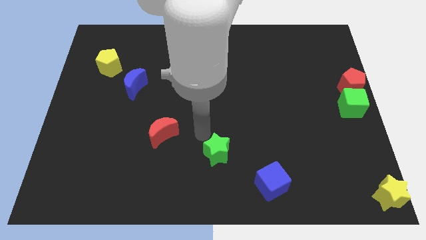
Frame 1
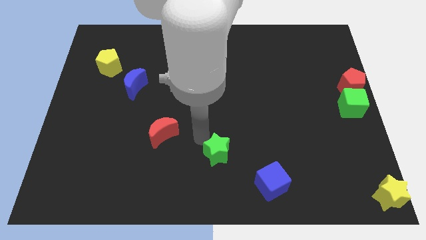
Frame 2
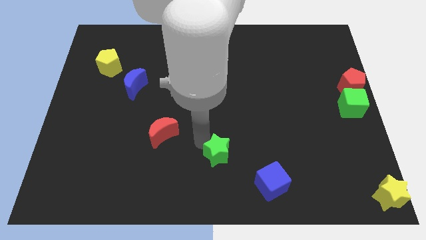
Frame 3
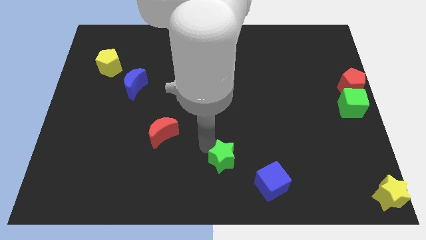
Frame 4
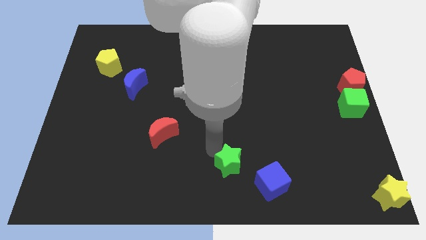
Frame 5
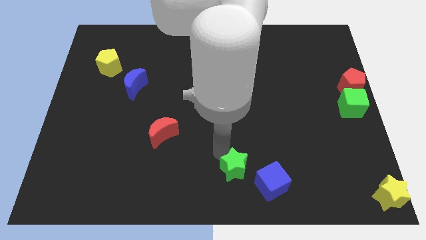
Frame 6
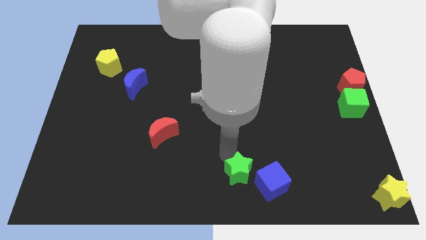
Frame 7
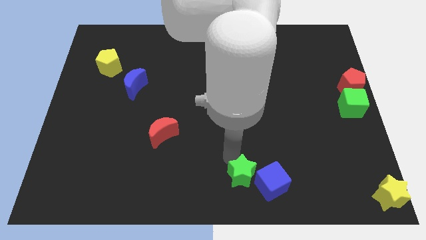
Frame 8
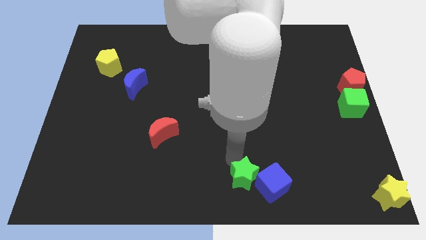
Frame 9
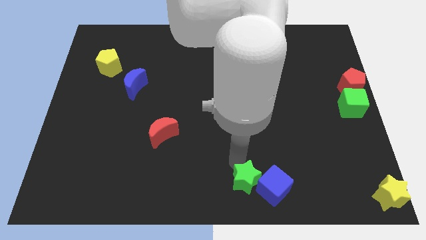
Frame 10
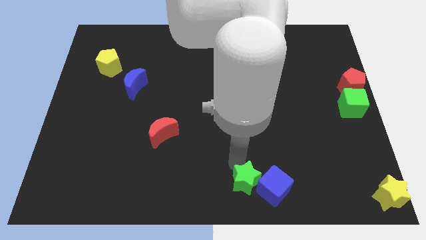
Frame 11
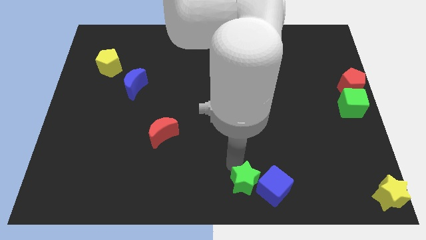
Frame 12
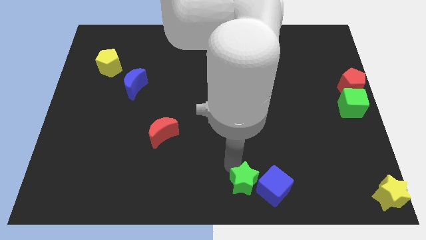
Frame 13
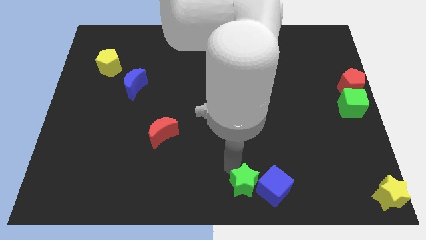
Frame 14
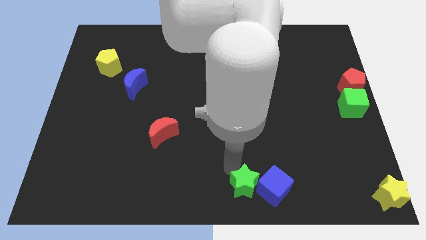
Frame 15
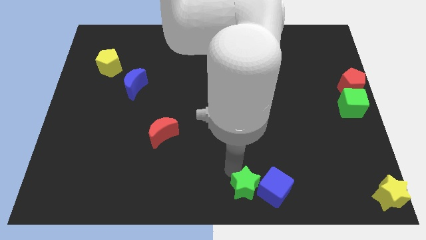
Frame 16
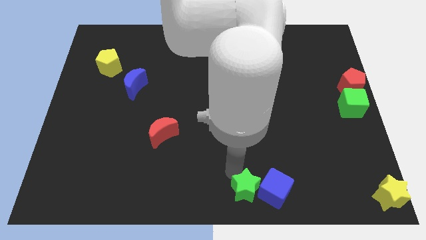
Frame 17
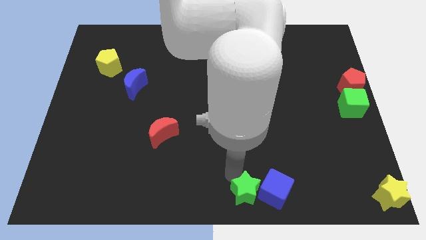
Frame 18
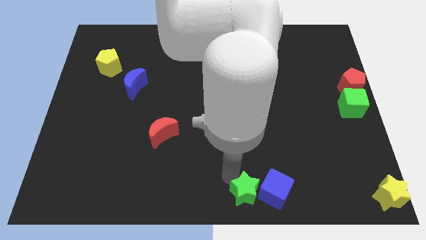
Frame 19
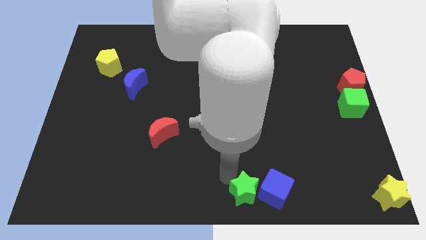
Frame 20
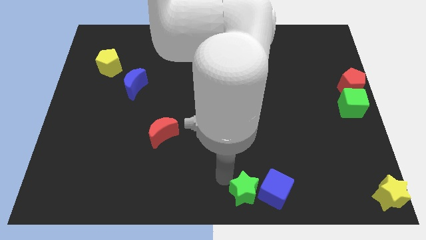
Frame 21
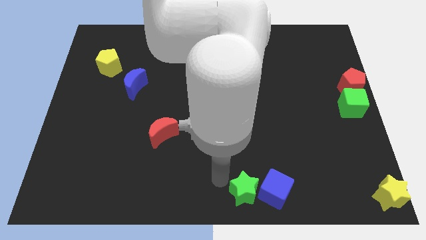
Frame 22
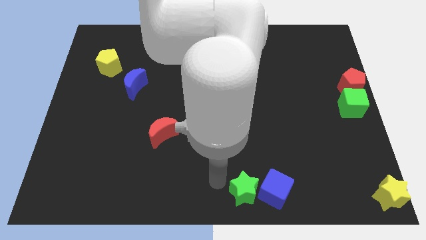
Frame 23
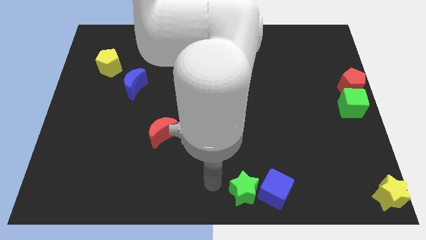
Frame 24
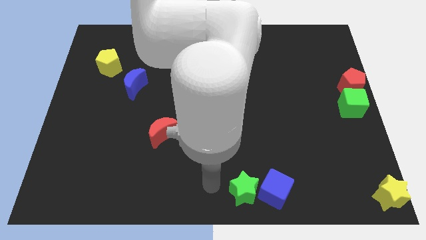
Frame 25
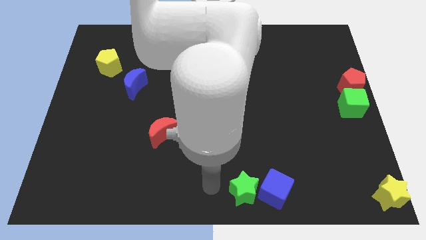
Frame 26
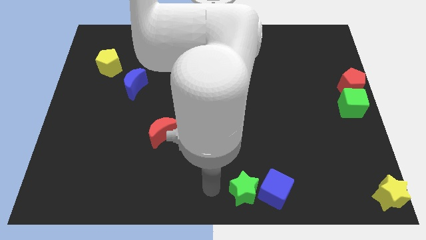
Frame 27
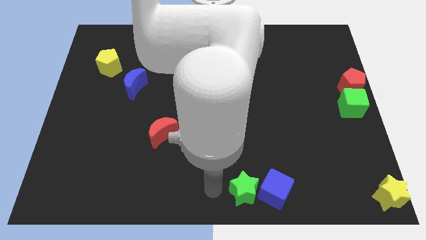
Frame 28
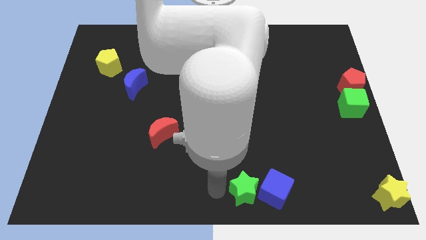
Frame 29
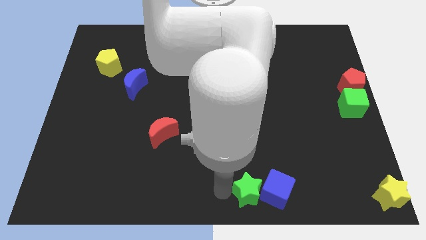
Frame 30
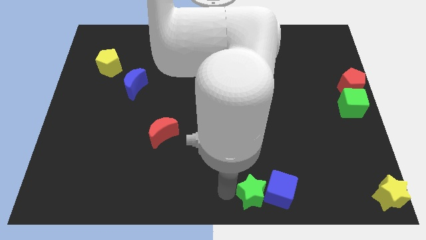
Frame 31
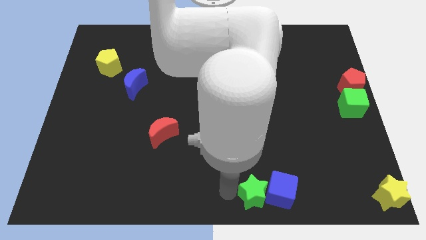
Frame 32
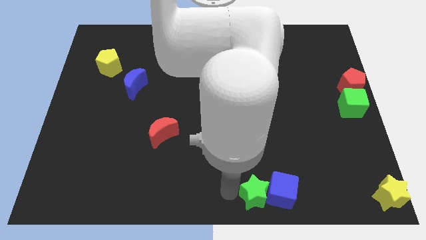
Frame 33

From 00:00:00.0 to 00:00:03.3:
push green star in to blue cube

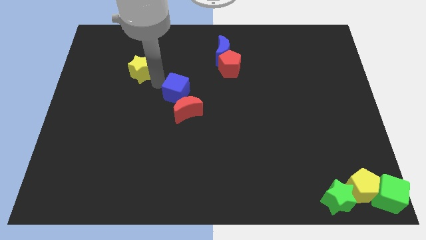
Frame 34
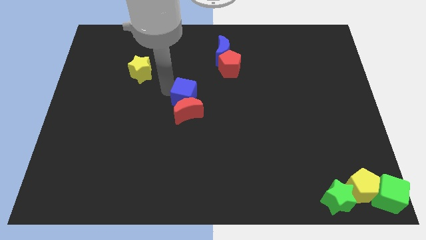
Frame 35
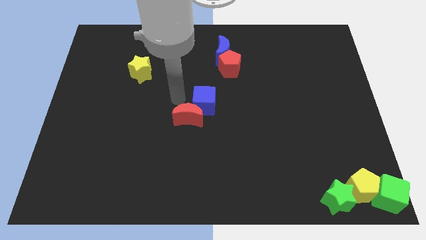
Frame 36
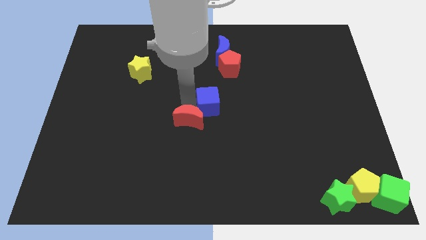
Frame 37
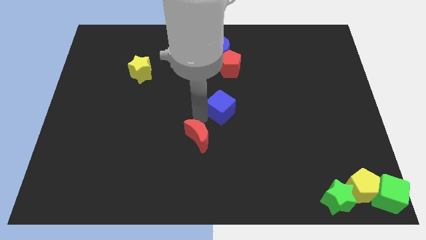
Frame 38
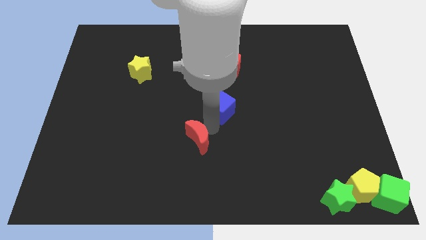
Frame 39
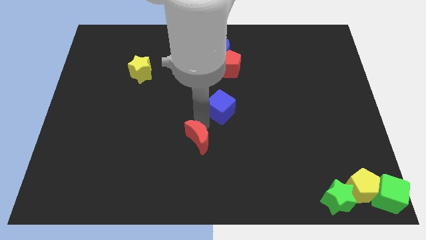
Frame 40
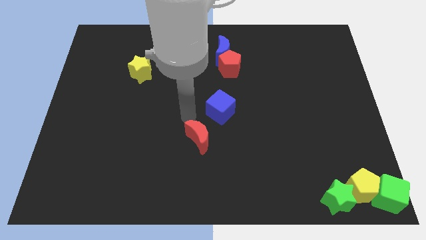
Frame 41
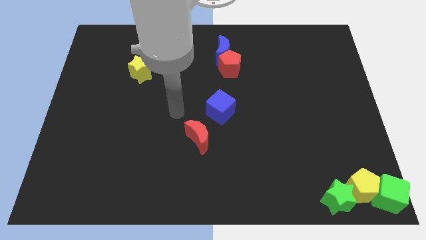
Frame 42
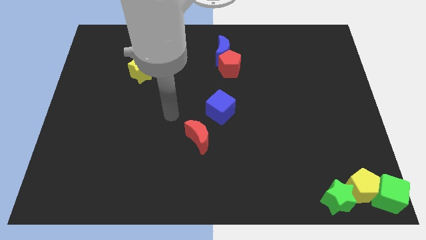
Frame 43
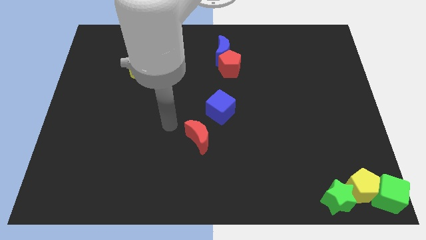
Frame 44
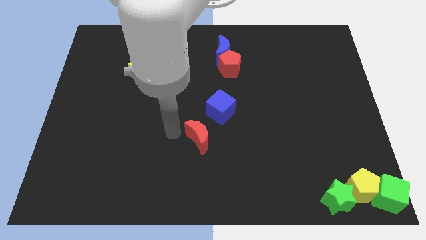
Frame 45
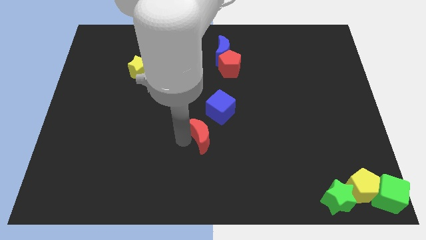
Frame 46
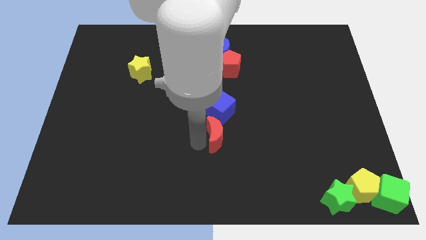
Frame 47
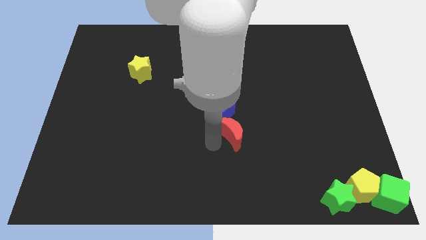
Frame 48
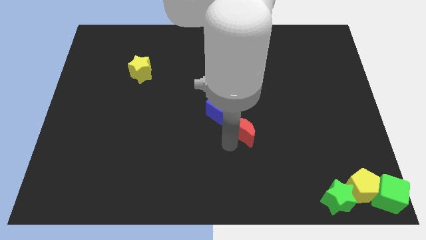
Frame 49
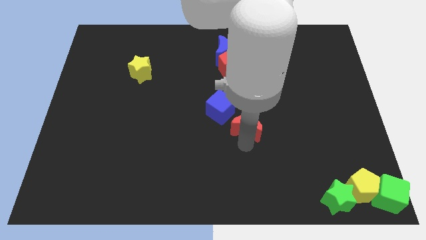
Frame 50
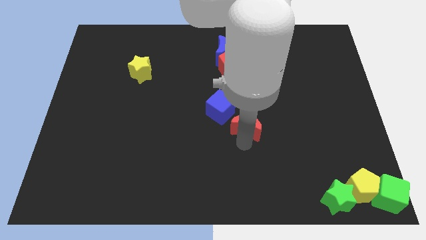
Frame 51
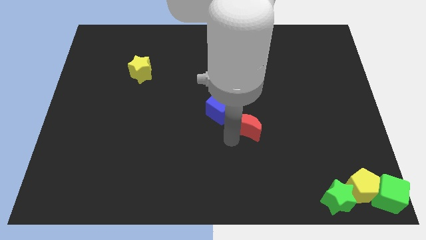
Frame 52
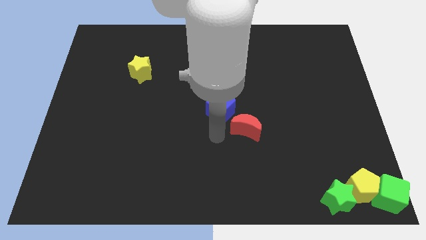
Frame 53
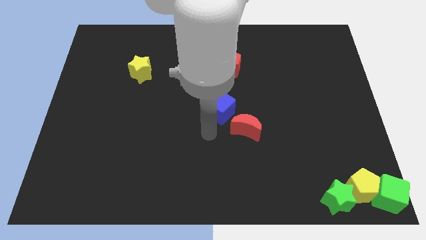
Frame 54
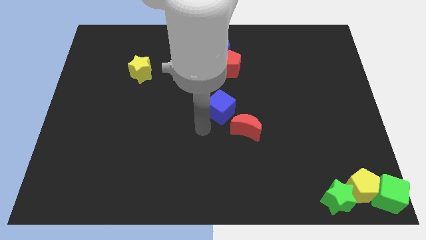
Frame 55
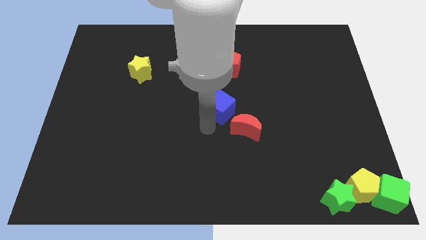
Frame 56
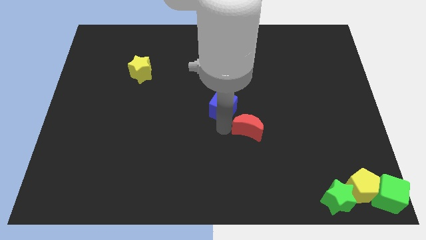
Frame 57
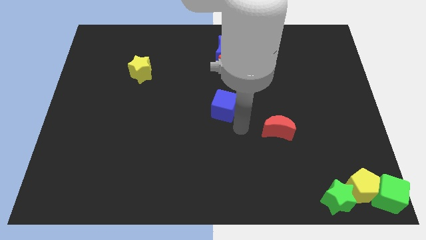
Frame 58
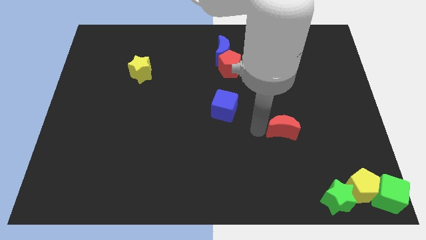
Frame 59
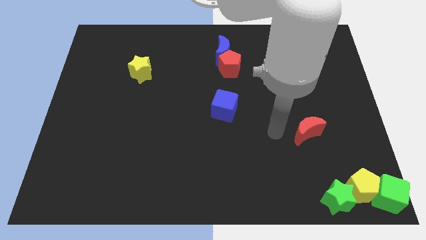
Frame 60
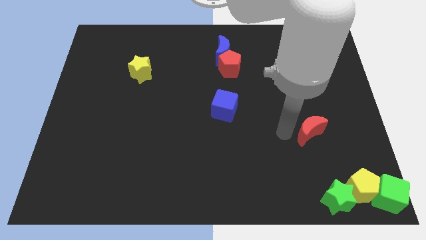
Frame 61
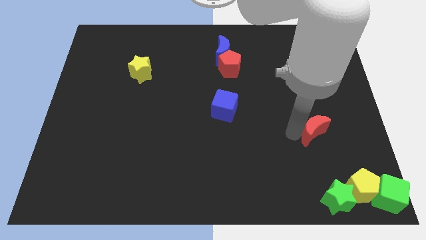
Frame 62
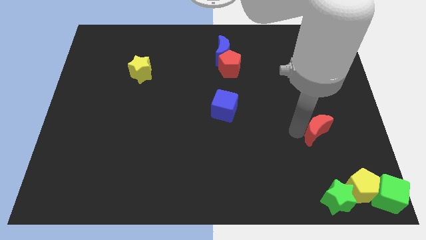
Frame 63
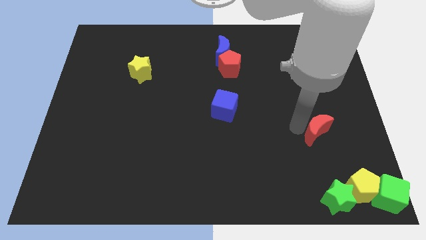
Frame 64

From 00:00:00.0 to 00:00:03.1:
push red crescent above green star

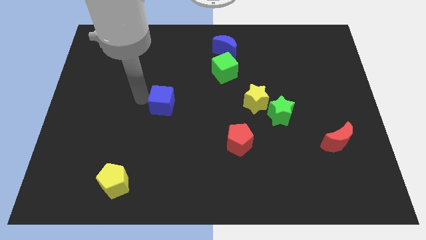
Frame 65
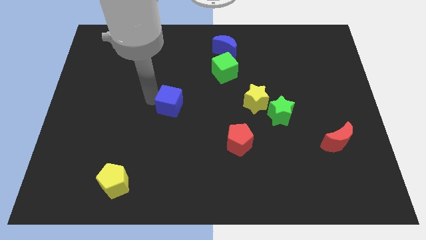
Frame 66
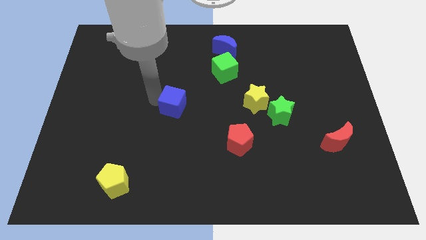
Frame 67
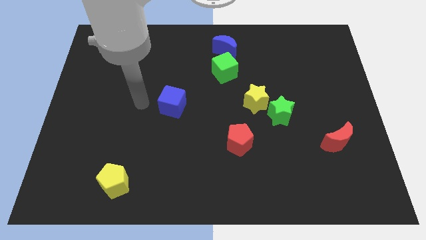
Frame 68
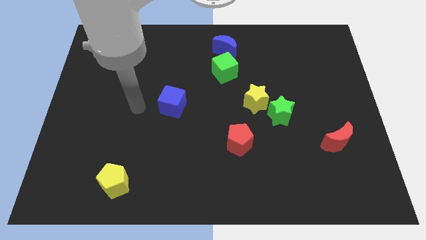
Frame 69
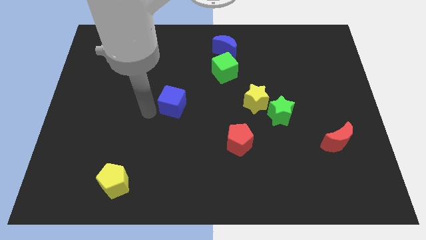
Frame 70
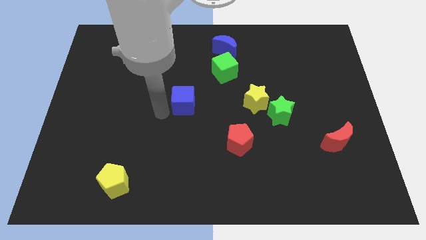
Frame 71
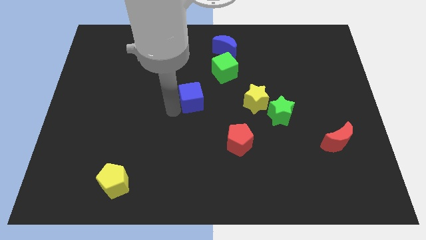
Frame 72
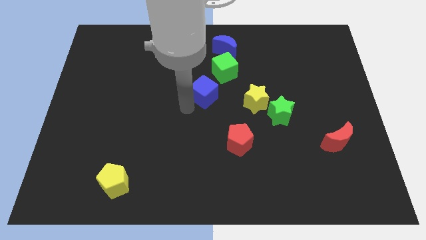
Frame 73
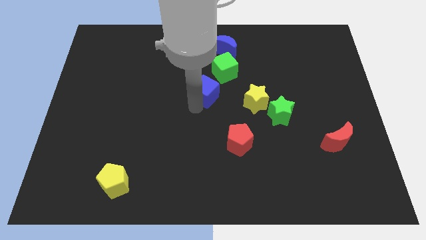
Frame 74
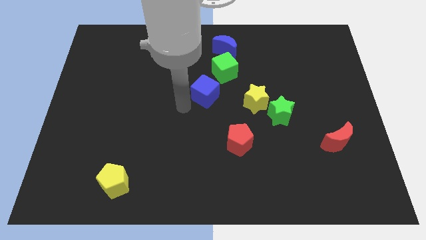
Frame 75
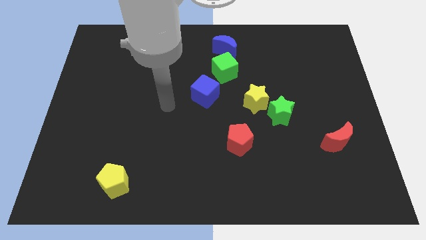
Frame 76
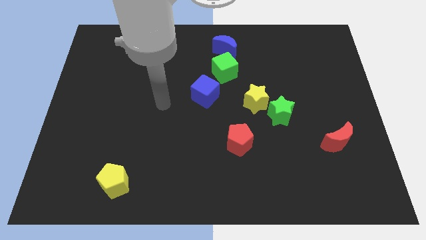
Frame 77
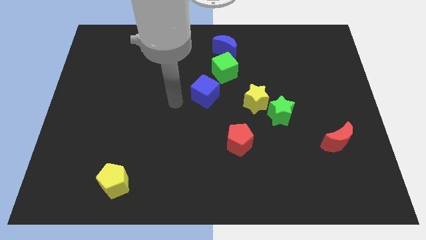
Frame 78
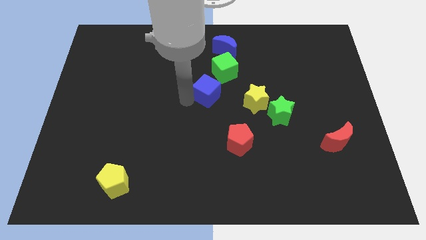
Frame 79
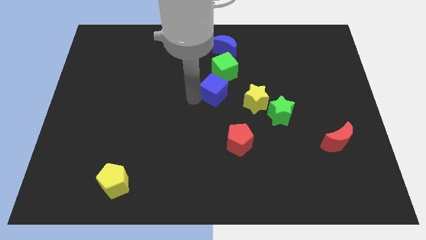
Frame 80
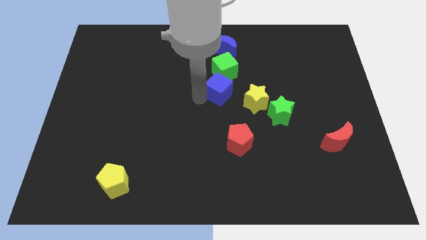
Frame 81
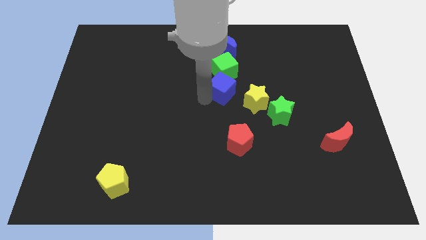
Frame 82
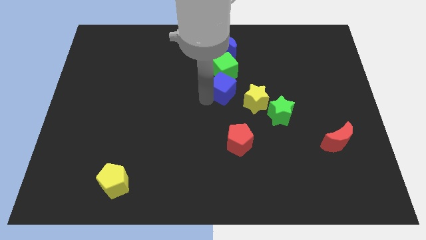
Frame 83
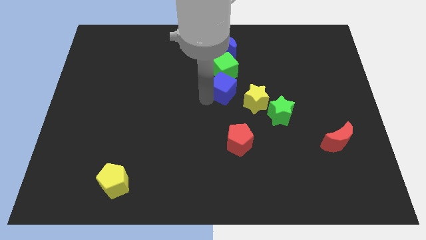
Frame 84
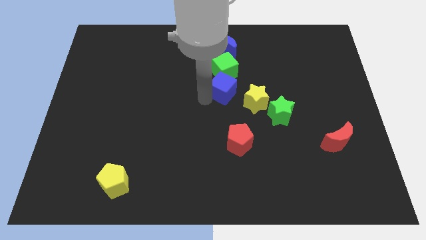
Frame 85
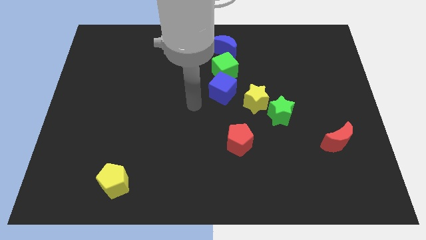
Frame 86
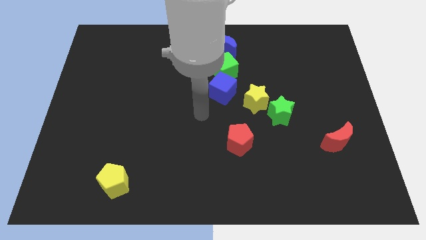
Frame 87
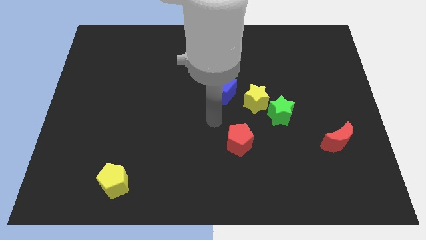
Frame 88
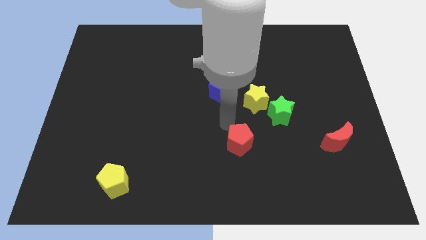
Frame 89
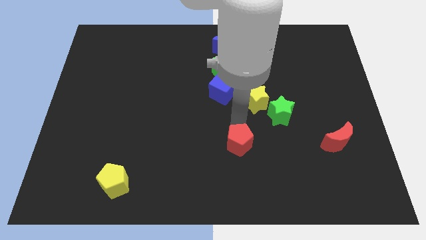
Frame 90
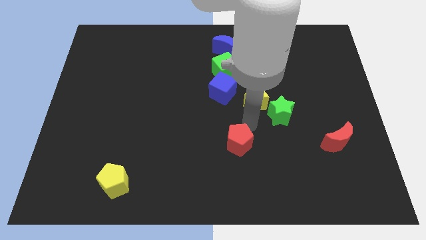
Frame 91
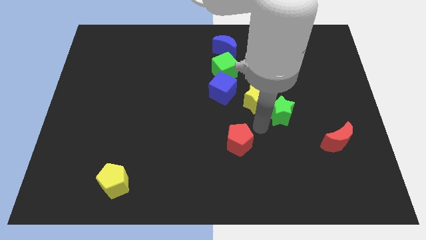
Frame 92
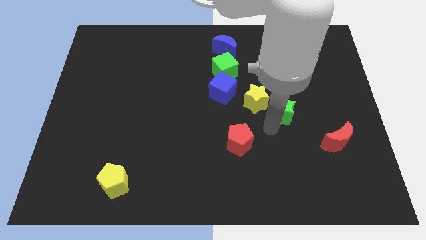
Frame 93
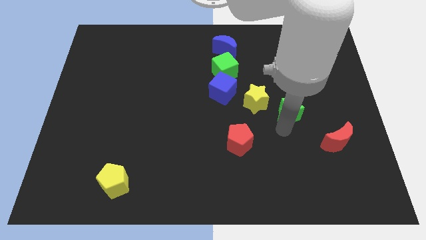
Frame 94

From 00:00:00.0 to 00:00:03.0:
place blue cube below green cube

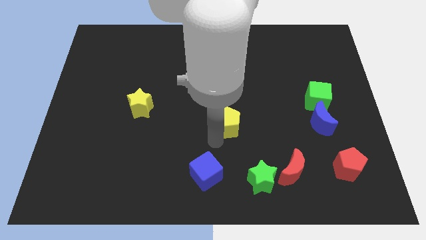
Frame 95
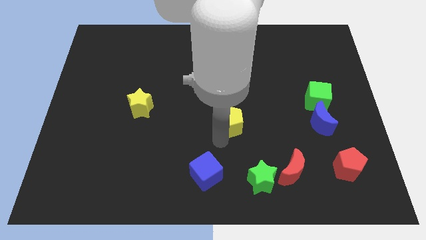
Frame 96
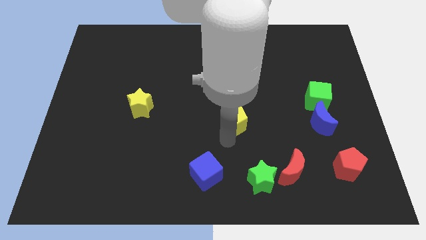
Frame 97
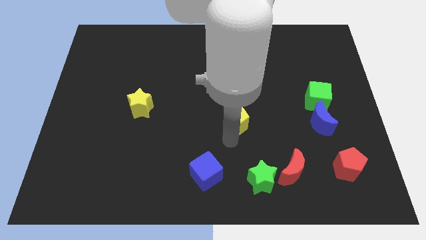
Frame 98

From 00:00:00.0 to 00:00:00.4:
push the yellow pentagon slightly up
